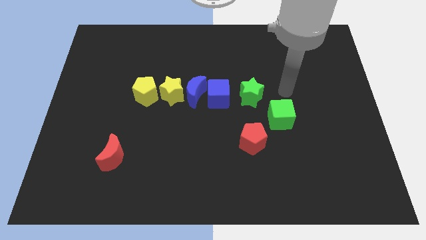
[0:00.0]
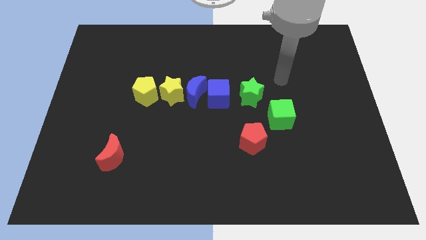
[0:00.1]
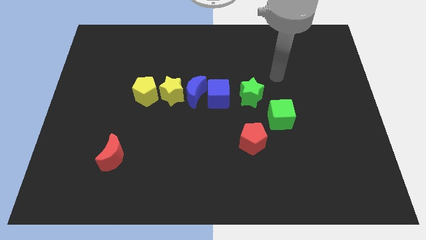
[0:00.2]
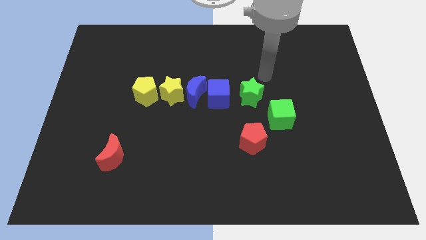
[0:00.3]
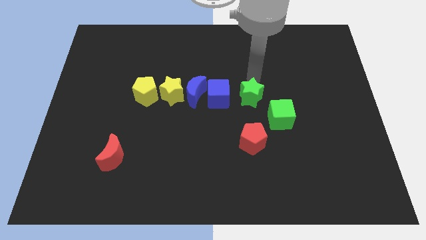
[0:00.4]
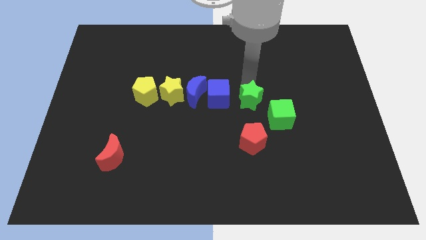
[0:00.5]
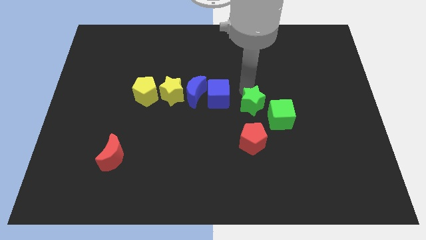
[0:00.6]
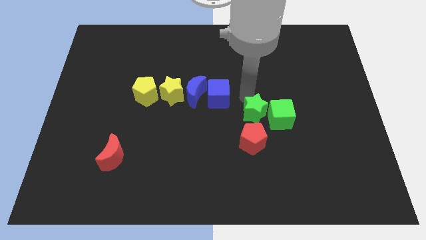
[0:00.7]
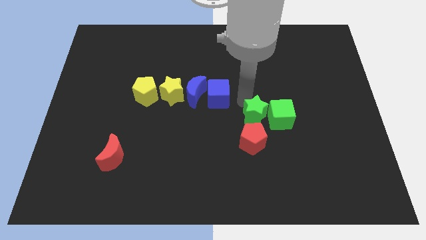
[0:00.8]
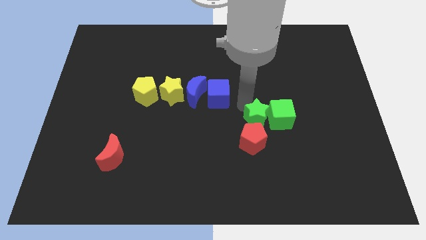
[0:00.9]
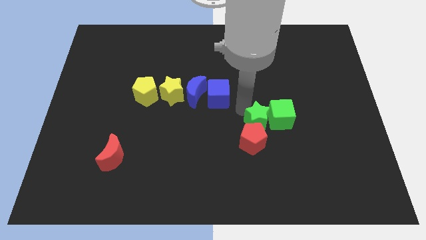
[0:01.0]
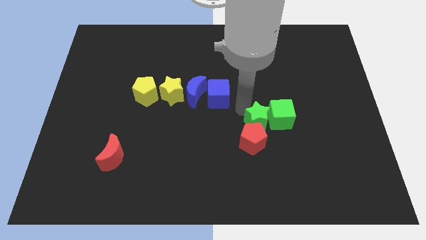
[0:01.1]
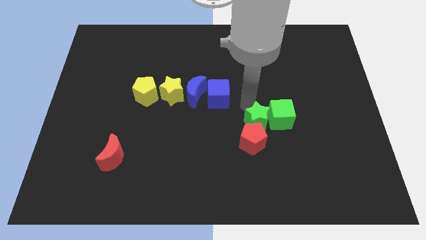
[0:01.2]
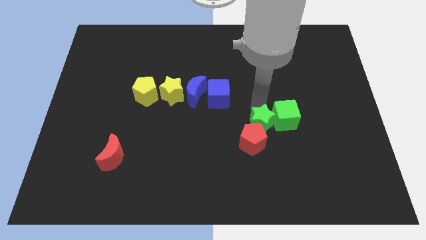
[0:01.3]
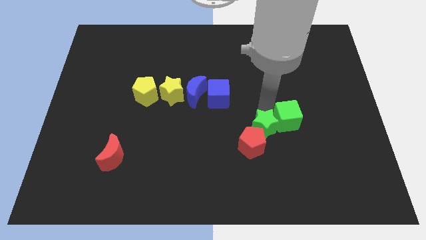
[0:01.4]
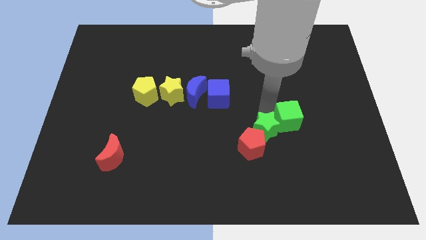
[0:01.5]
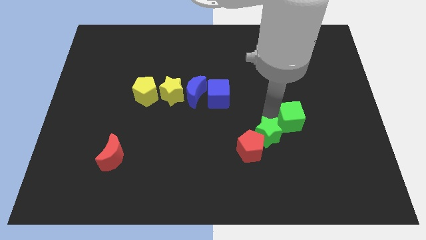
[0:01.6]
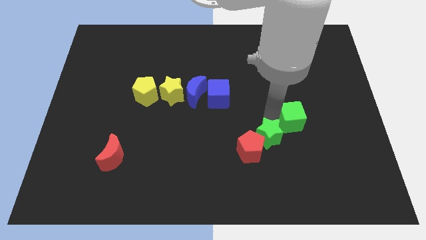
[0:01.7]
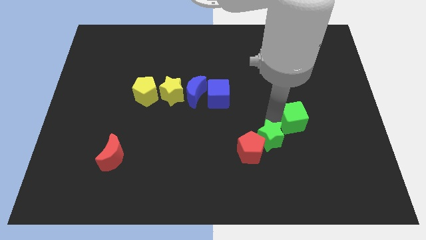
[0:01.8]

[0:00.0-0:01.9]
push the green star into the red pentagon

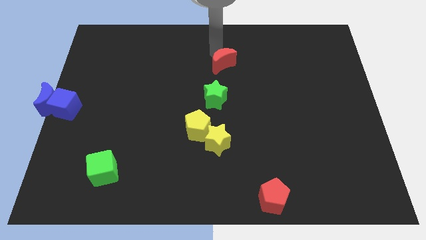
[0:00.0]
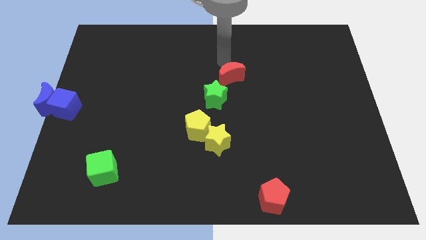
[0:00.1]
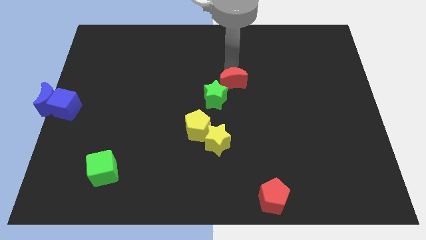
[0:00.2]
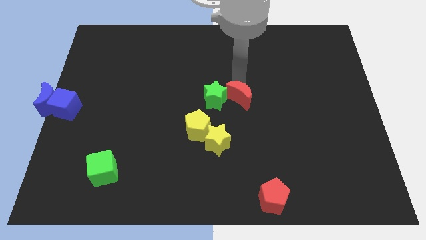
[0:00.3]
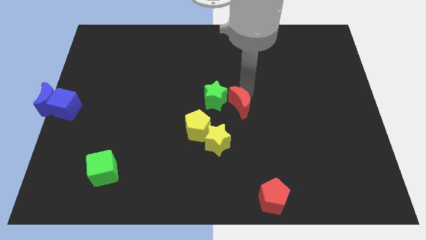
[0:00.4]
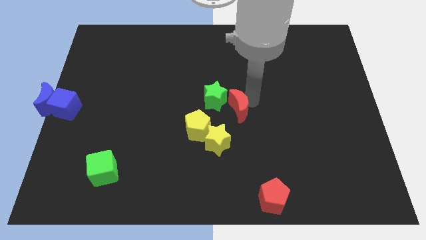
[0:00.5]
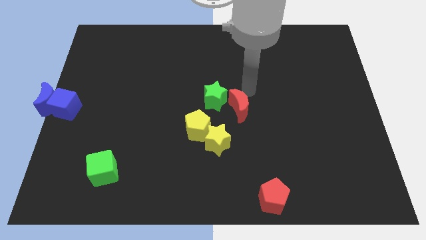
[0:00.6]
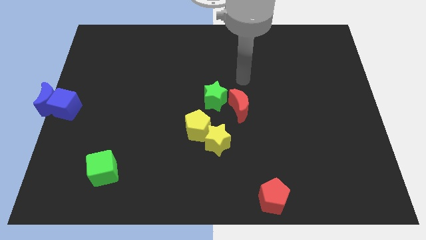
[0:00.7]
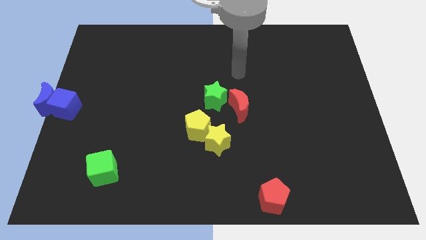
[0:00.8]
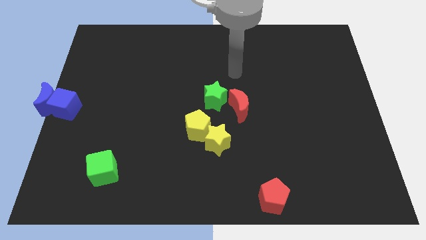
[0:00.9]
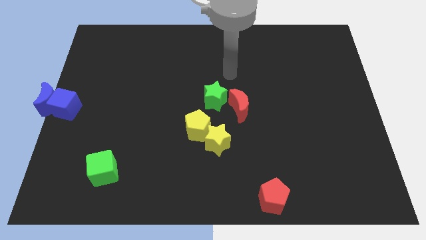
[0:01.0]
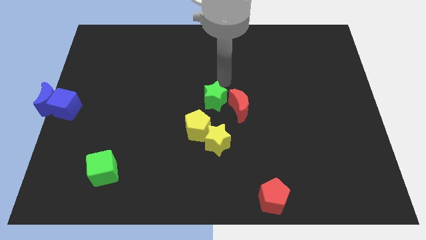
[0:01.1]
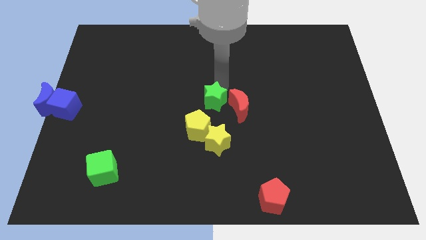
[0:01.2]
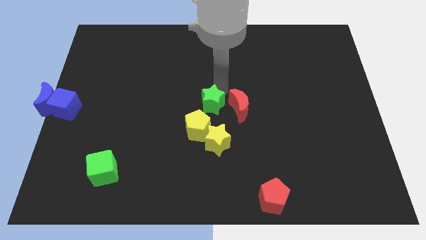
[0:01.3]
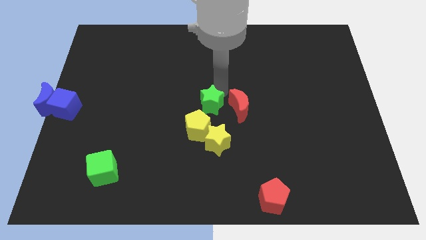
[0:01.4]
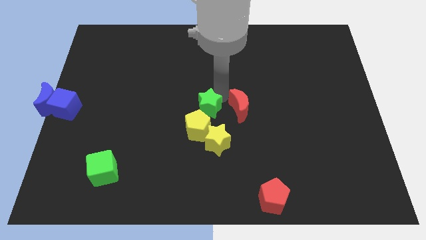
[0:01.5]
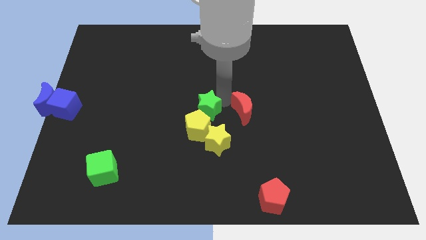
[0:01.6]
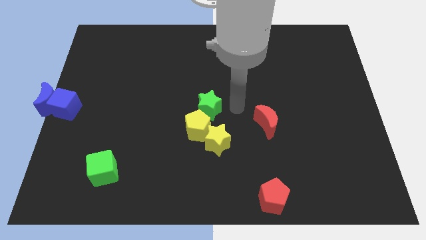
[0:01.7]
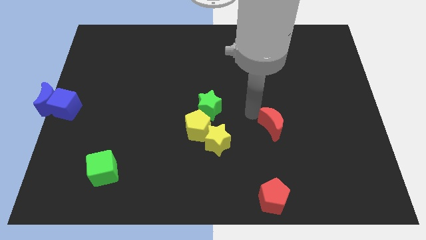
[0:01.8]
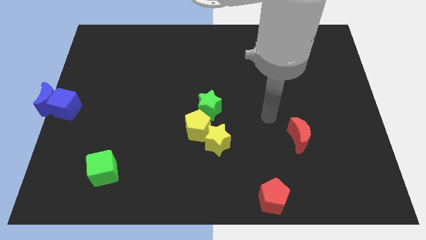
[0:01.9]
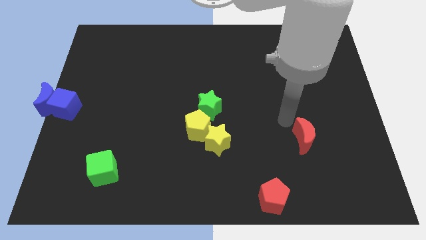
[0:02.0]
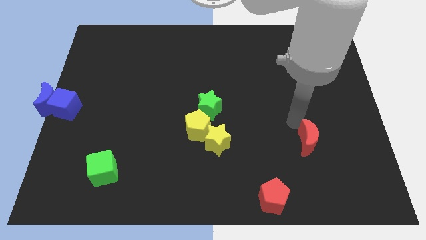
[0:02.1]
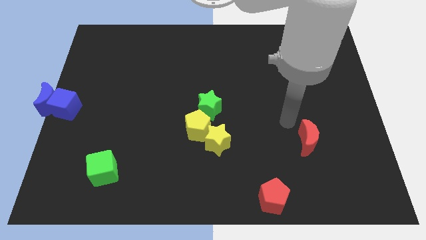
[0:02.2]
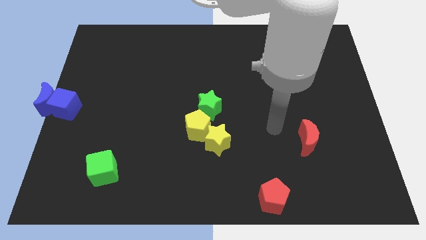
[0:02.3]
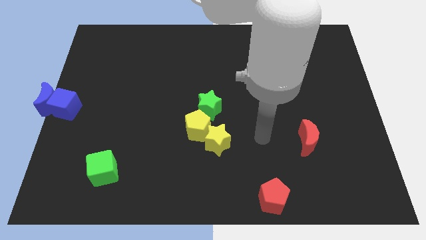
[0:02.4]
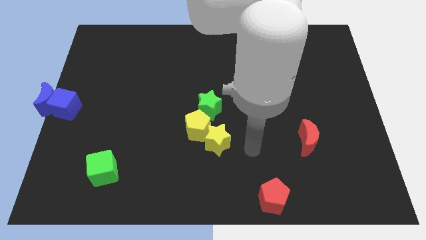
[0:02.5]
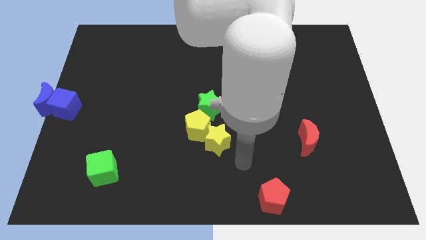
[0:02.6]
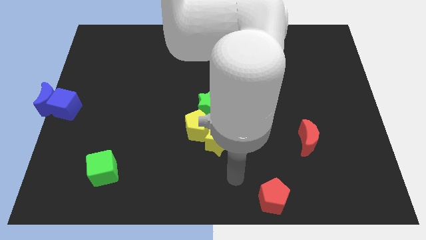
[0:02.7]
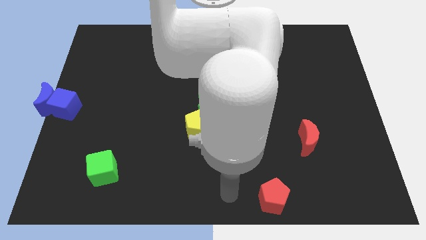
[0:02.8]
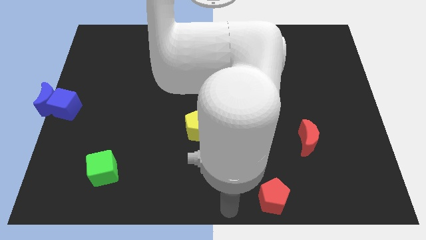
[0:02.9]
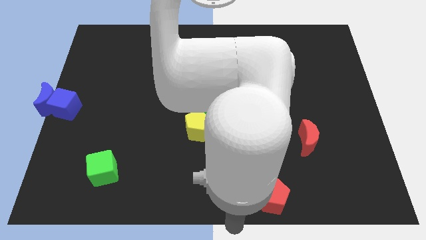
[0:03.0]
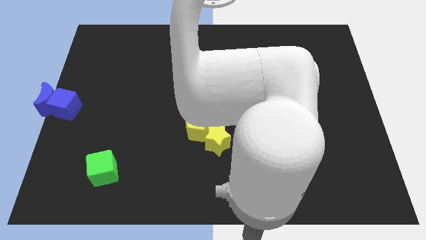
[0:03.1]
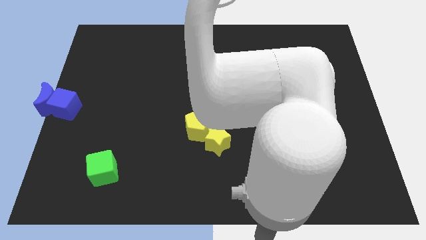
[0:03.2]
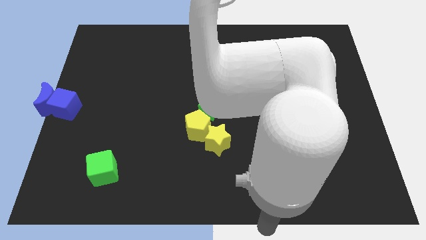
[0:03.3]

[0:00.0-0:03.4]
move the red crescent separate from the green star

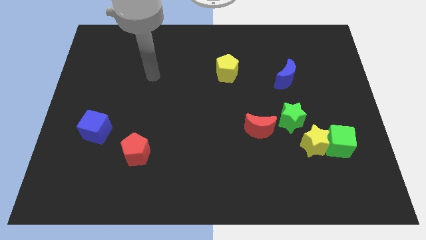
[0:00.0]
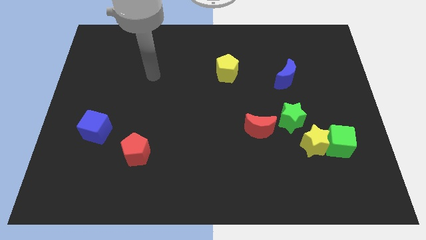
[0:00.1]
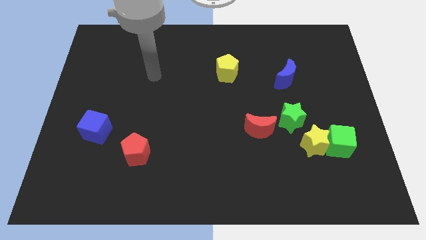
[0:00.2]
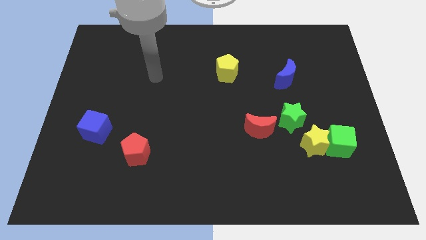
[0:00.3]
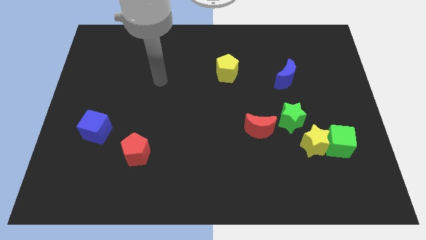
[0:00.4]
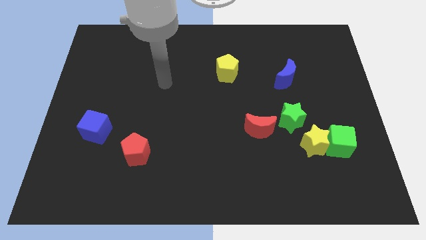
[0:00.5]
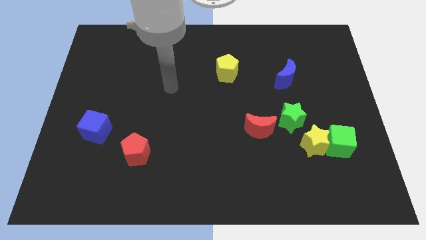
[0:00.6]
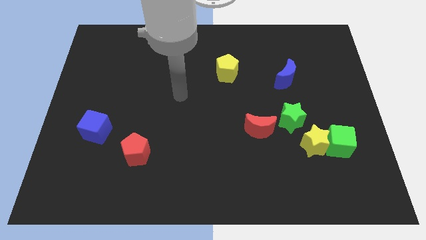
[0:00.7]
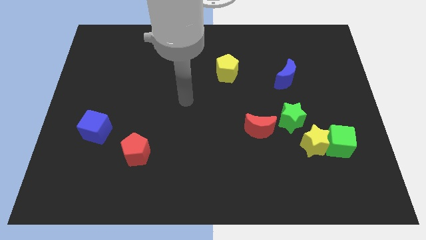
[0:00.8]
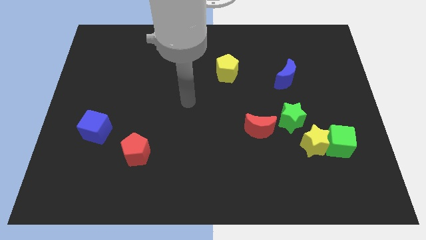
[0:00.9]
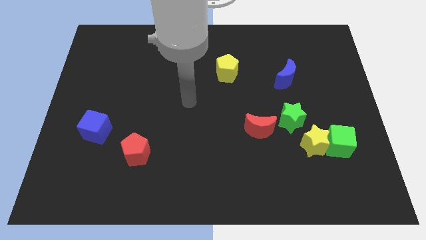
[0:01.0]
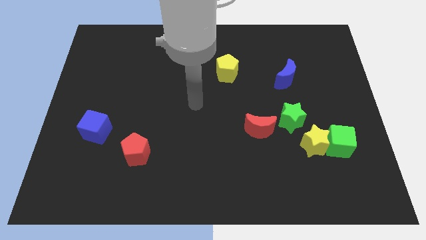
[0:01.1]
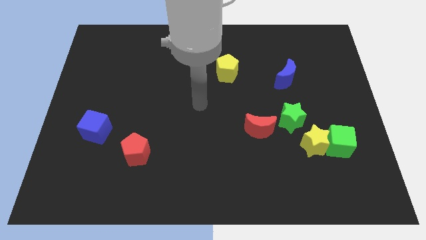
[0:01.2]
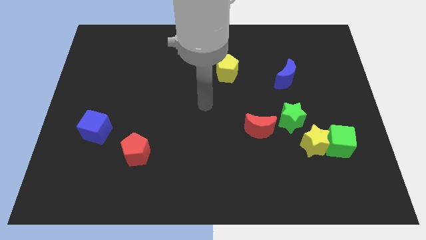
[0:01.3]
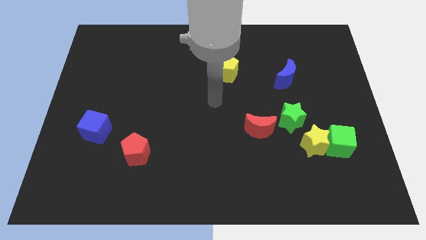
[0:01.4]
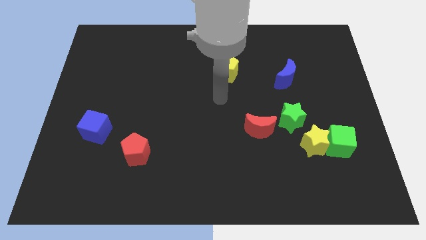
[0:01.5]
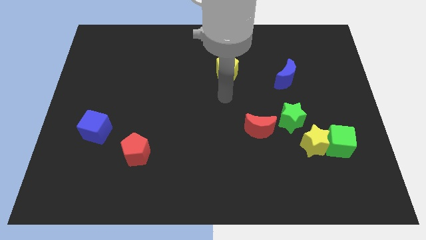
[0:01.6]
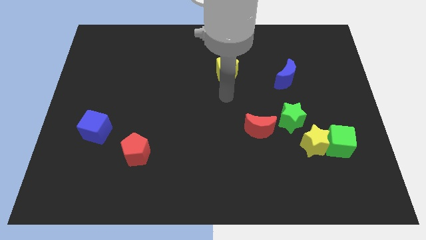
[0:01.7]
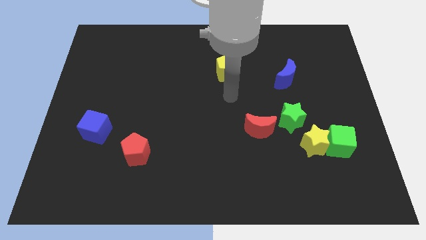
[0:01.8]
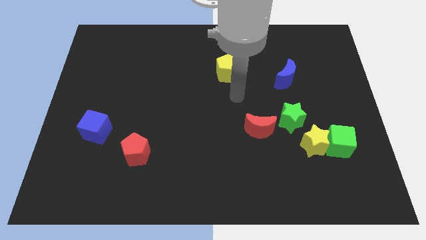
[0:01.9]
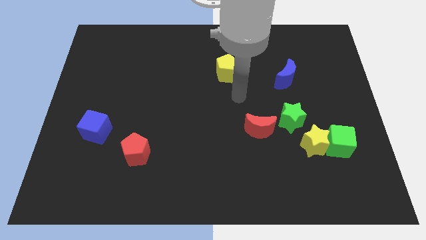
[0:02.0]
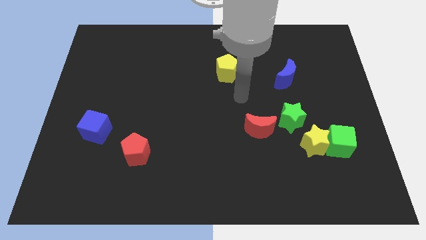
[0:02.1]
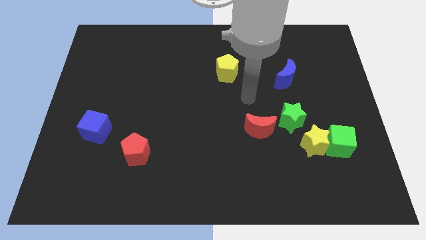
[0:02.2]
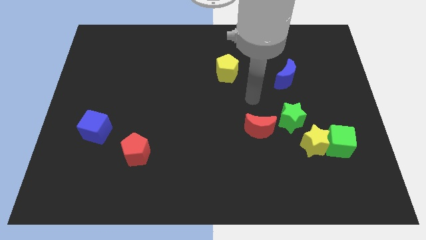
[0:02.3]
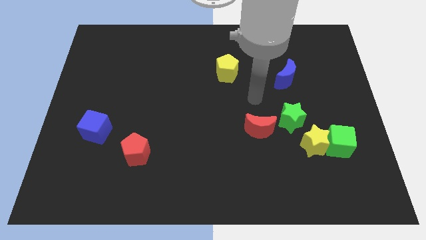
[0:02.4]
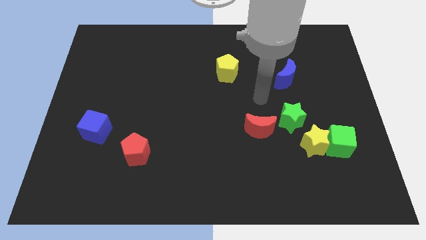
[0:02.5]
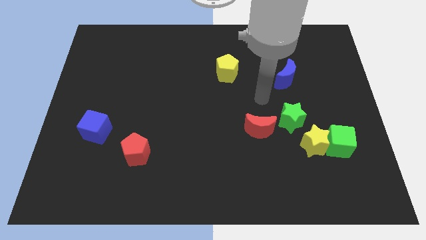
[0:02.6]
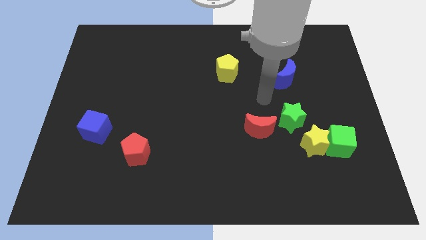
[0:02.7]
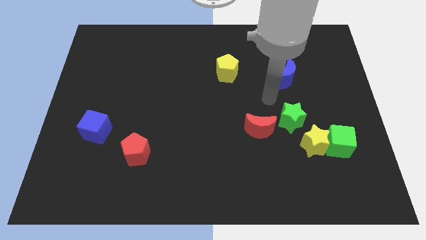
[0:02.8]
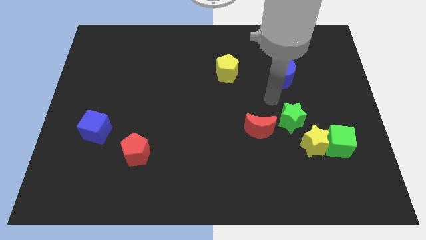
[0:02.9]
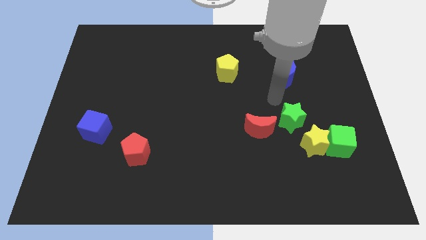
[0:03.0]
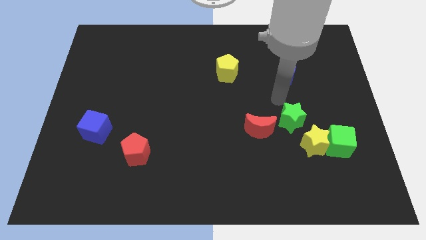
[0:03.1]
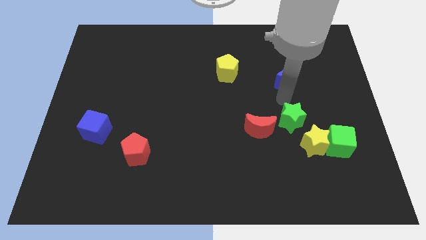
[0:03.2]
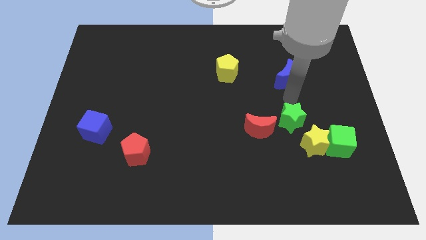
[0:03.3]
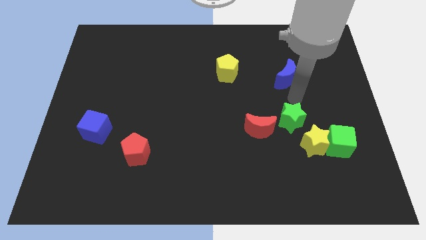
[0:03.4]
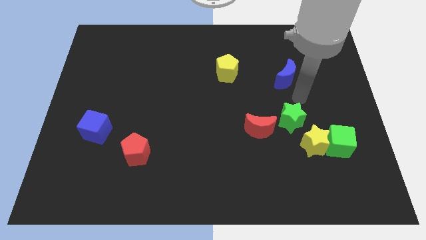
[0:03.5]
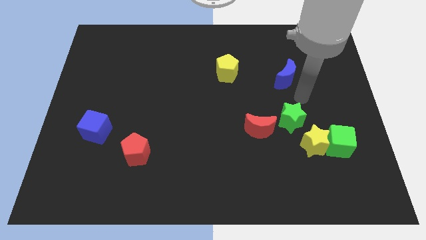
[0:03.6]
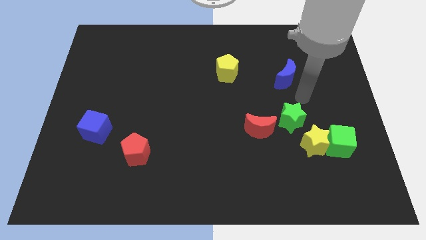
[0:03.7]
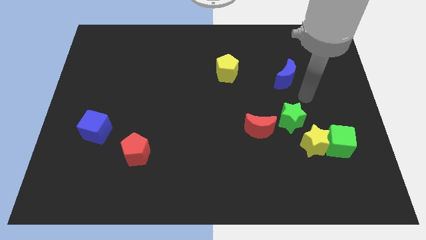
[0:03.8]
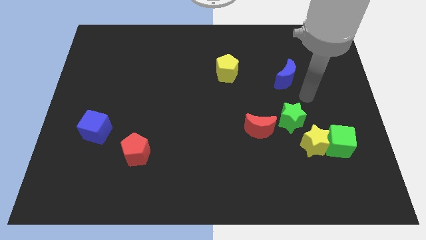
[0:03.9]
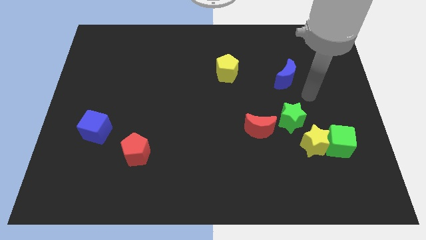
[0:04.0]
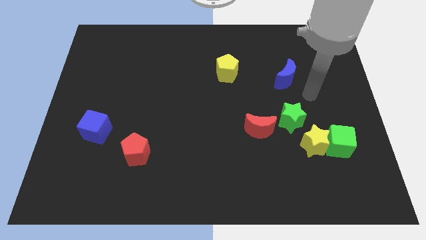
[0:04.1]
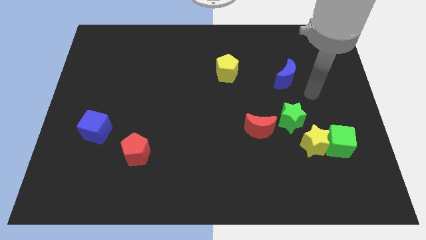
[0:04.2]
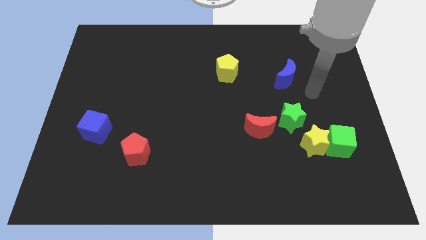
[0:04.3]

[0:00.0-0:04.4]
move your arm to the center right
